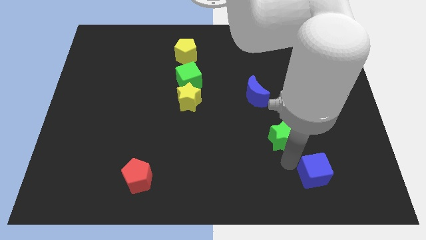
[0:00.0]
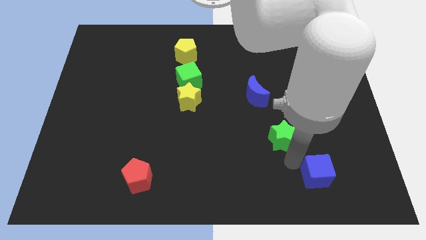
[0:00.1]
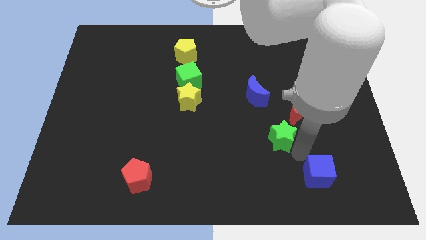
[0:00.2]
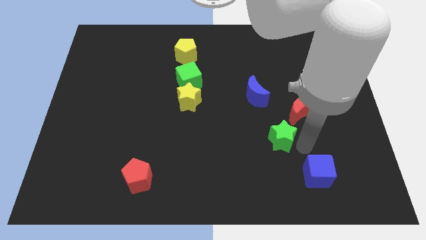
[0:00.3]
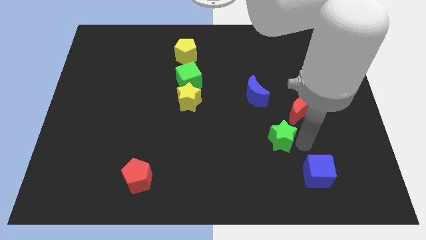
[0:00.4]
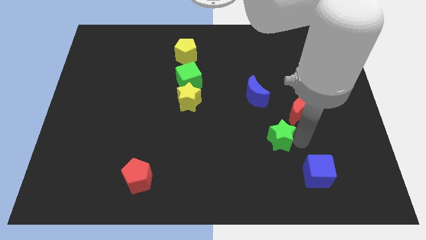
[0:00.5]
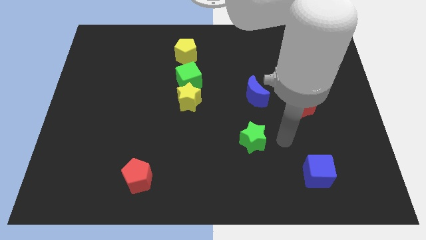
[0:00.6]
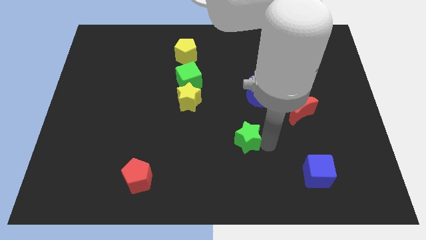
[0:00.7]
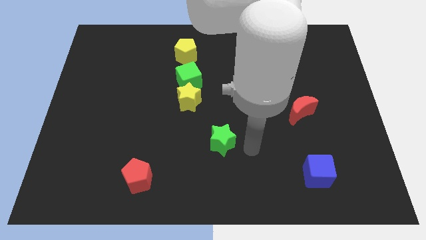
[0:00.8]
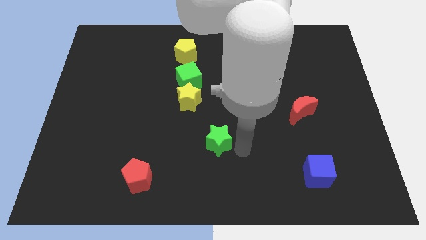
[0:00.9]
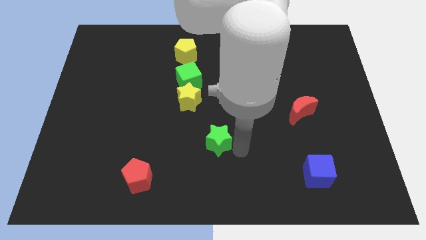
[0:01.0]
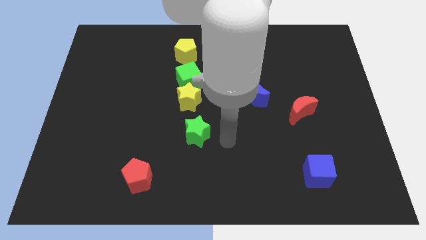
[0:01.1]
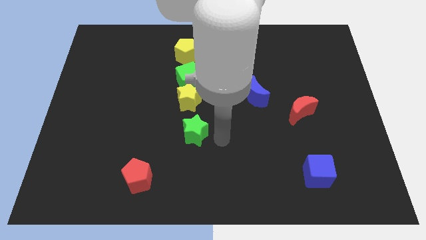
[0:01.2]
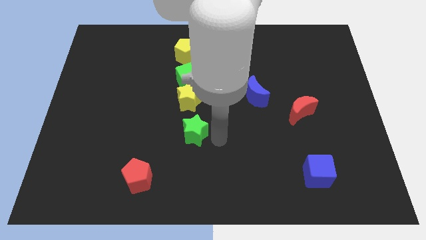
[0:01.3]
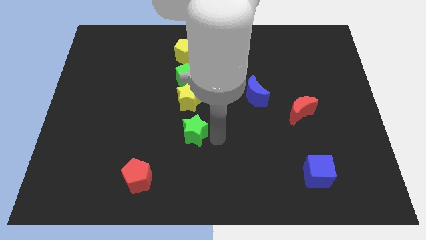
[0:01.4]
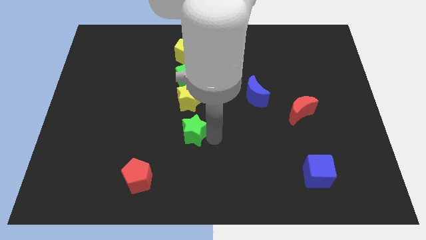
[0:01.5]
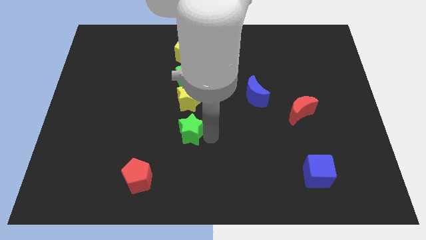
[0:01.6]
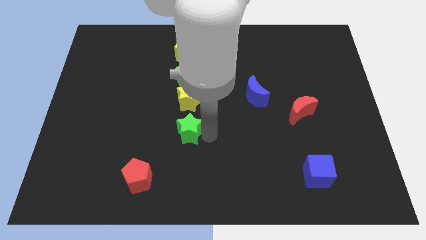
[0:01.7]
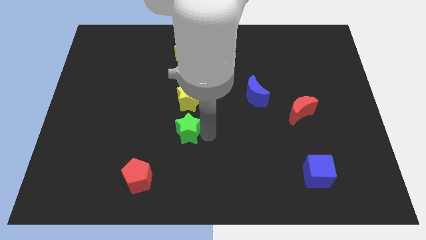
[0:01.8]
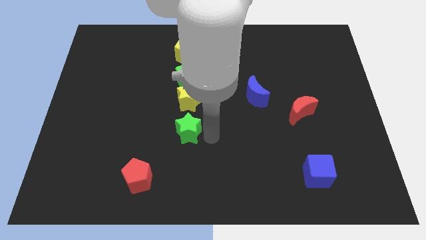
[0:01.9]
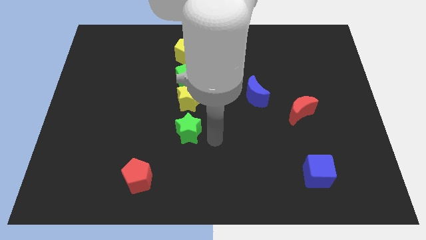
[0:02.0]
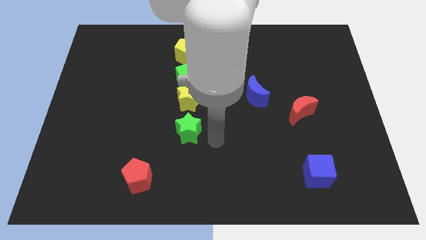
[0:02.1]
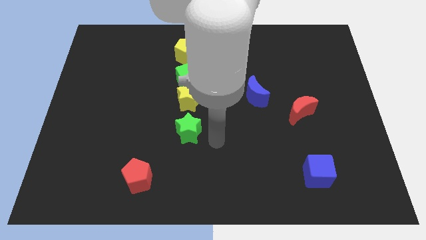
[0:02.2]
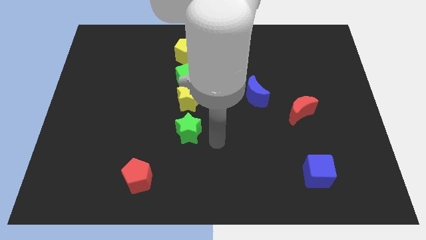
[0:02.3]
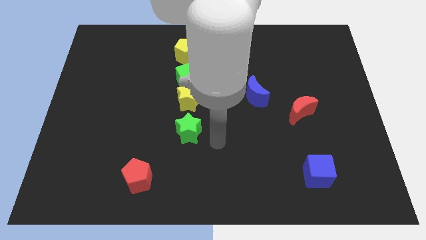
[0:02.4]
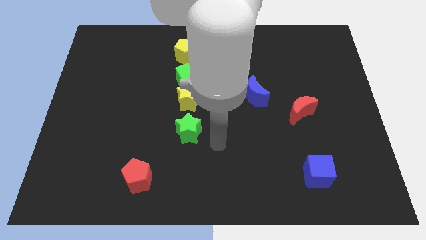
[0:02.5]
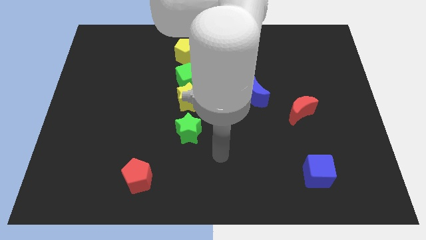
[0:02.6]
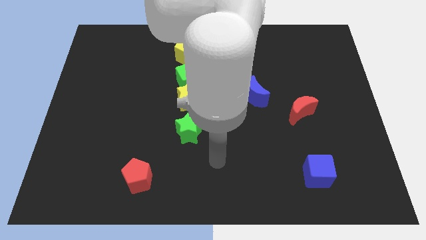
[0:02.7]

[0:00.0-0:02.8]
place the green star below the yellow star

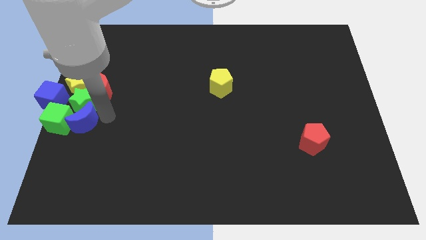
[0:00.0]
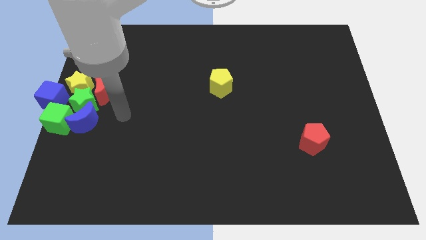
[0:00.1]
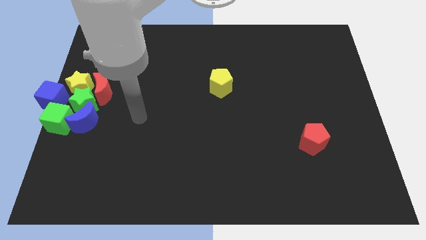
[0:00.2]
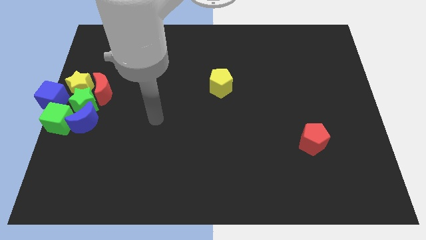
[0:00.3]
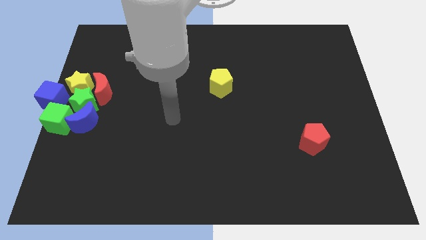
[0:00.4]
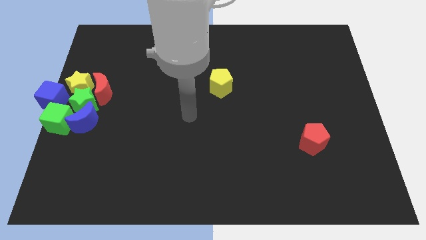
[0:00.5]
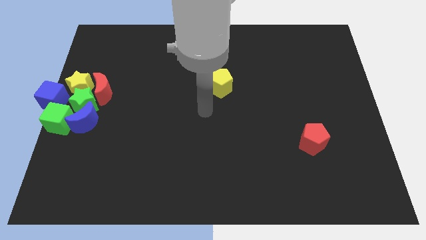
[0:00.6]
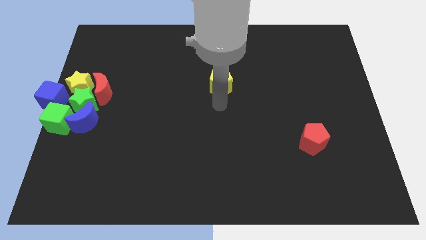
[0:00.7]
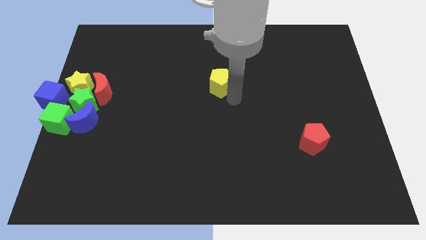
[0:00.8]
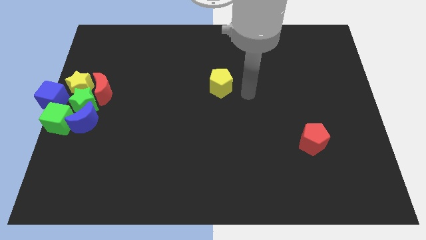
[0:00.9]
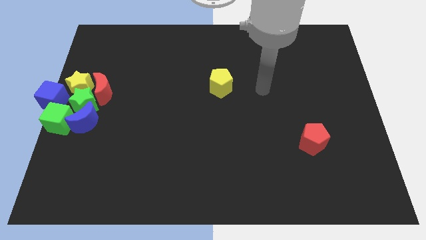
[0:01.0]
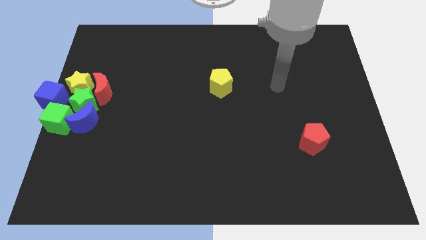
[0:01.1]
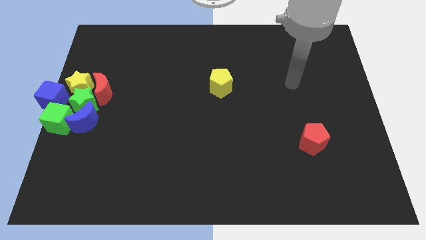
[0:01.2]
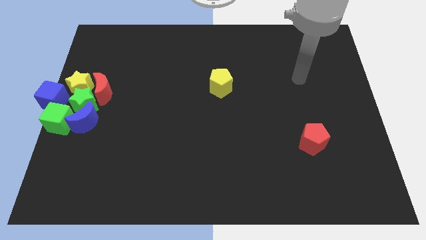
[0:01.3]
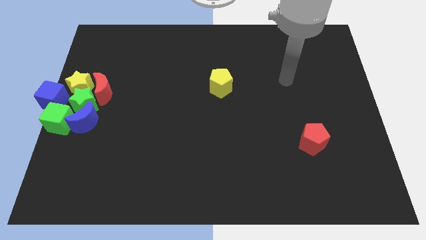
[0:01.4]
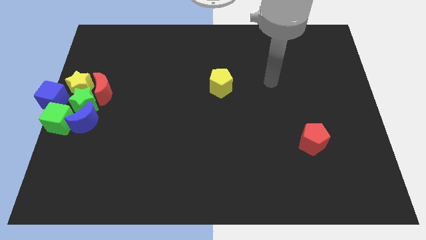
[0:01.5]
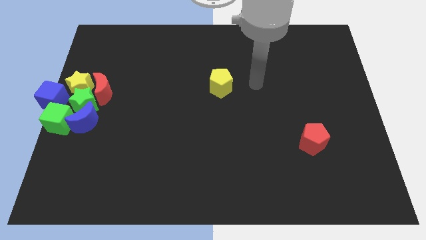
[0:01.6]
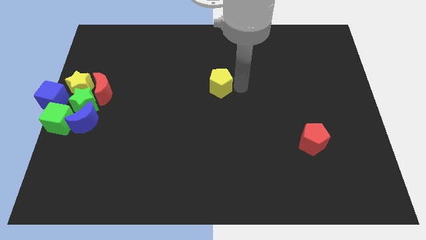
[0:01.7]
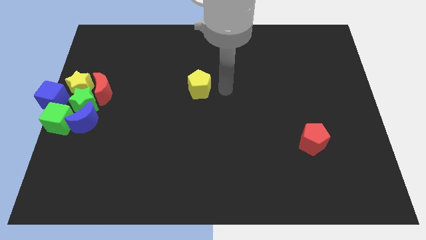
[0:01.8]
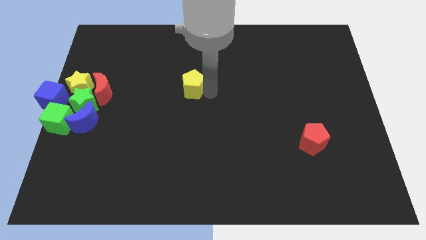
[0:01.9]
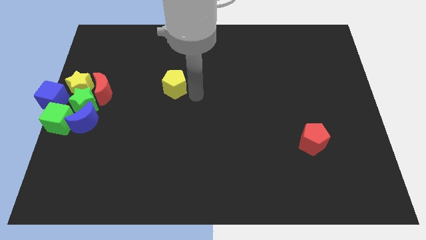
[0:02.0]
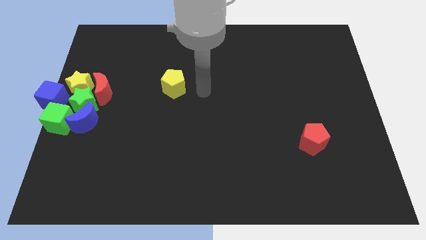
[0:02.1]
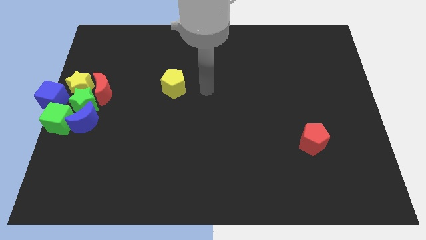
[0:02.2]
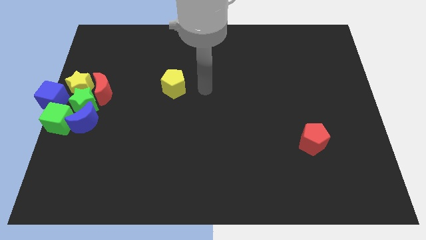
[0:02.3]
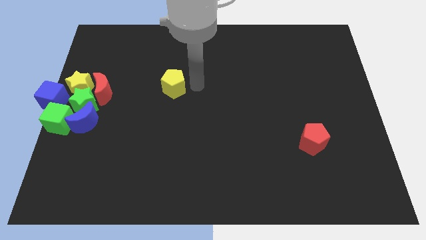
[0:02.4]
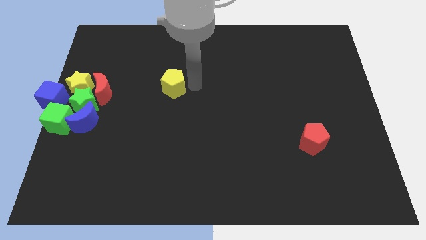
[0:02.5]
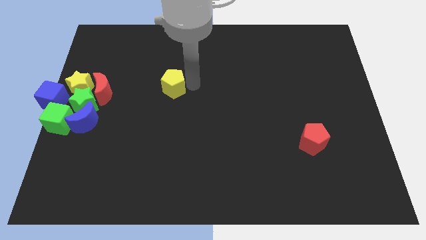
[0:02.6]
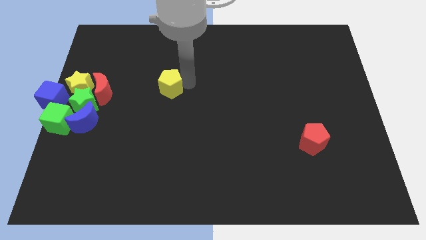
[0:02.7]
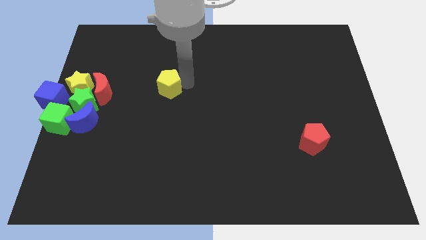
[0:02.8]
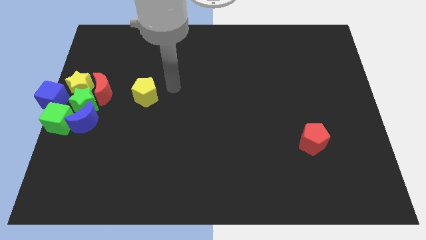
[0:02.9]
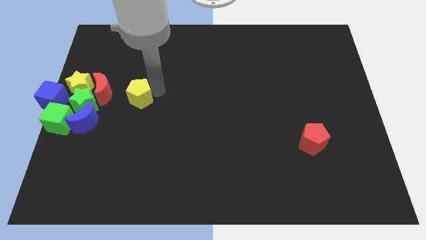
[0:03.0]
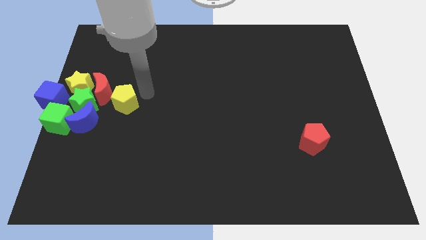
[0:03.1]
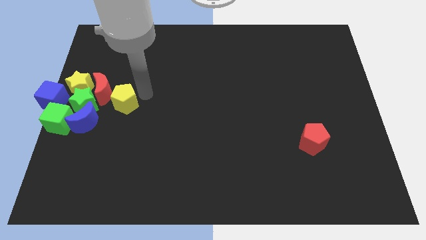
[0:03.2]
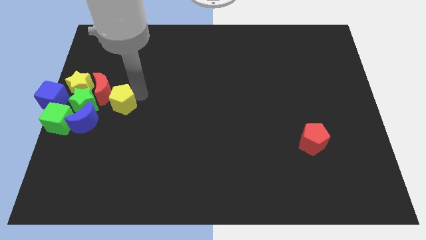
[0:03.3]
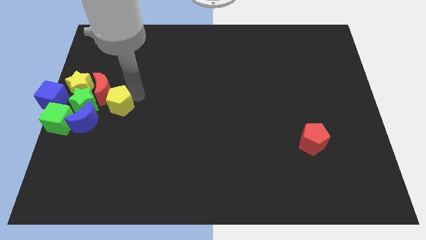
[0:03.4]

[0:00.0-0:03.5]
place the yellow pentagon right to the green star

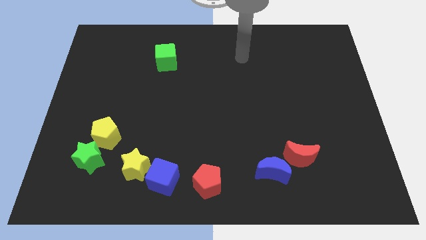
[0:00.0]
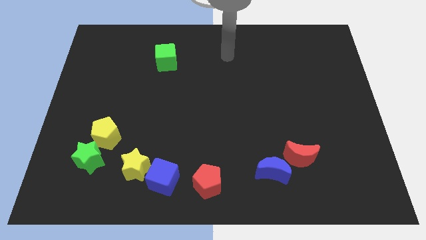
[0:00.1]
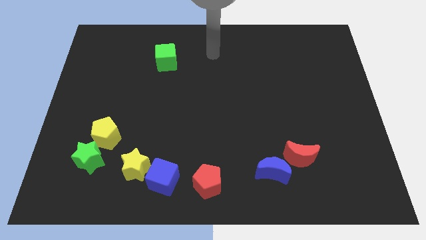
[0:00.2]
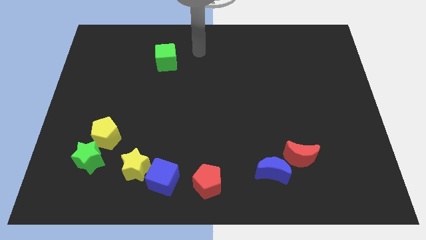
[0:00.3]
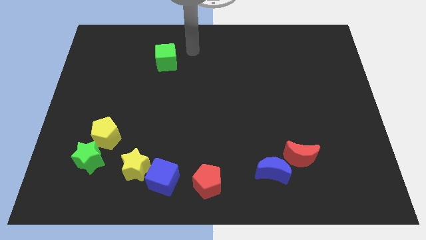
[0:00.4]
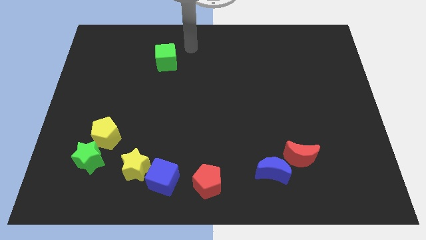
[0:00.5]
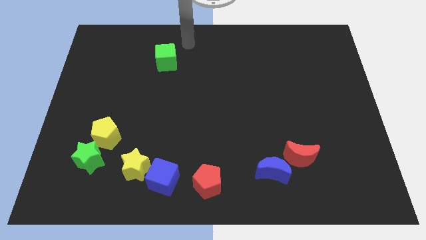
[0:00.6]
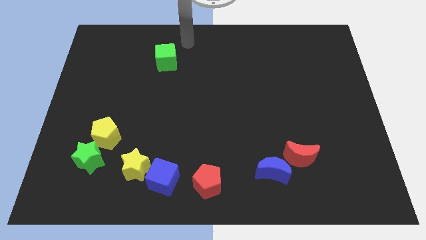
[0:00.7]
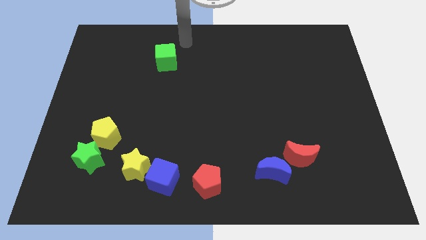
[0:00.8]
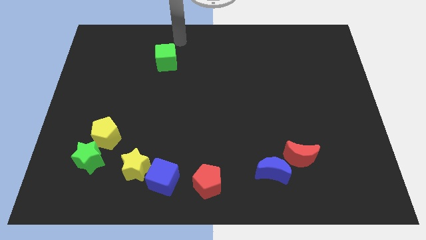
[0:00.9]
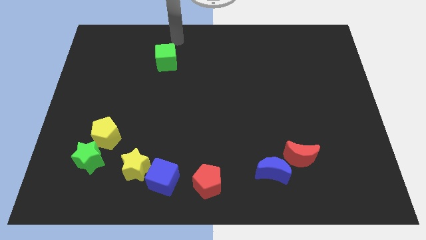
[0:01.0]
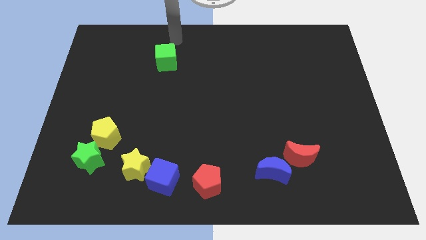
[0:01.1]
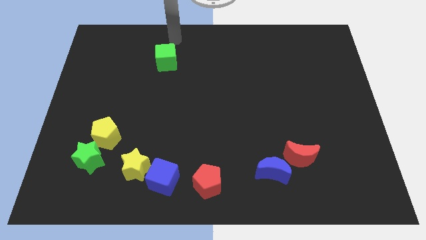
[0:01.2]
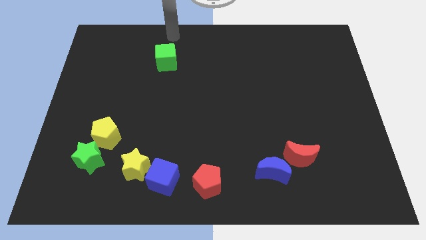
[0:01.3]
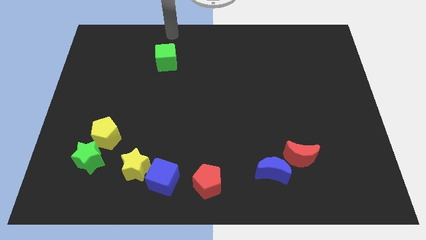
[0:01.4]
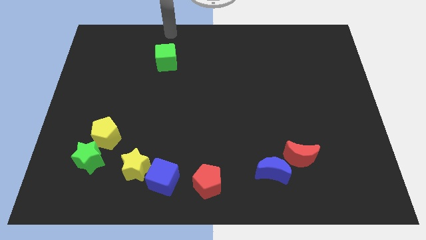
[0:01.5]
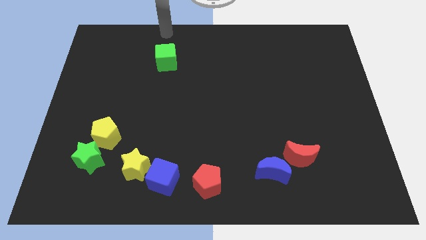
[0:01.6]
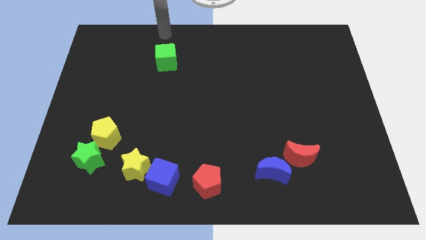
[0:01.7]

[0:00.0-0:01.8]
move your arm on the top of green cube

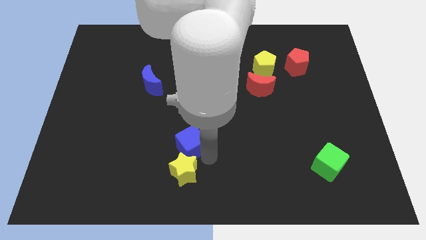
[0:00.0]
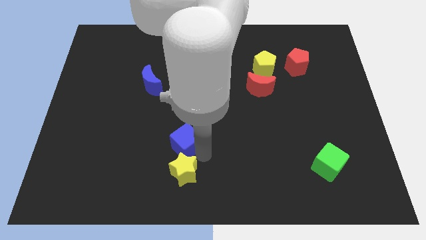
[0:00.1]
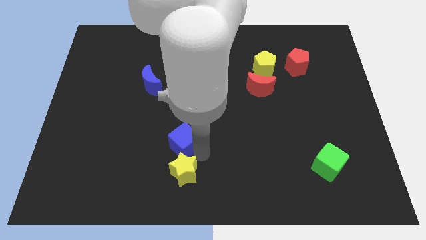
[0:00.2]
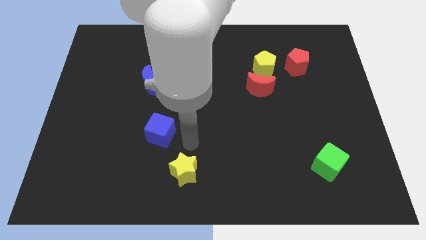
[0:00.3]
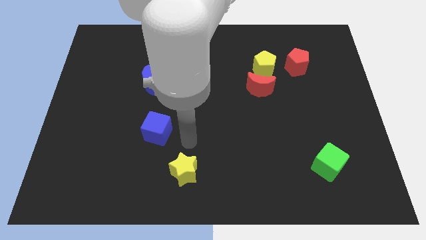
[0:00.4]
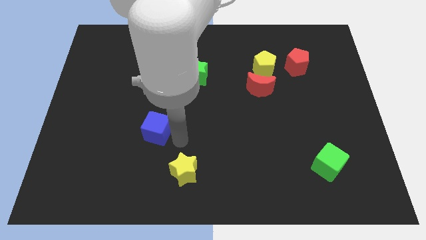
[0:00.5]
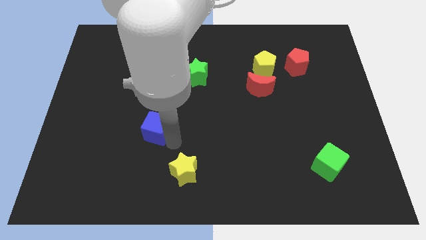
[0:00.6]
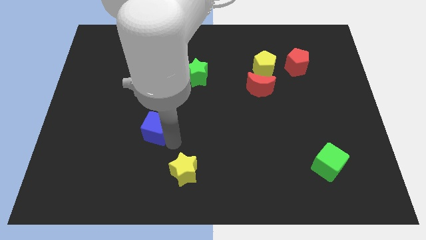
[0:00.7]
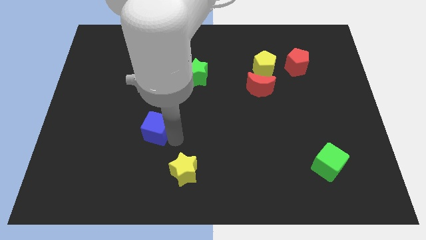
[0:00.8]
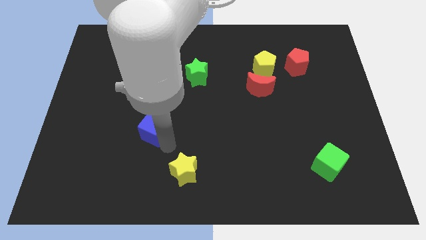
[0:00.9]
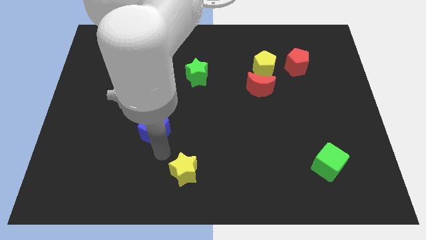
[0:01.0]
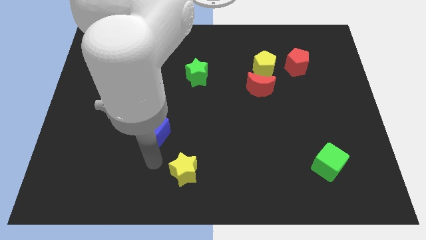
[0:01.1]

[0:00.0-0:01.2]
move the blue cube away from yellow star
